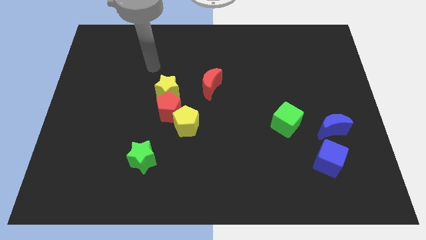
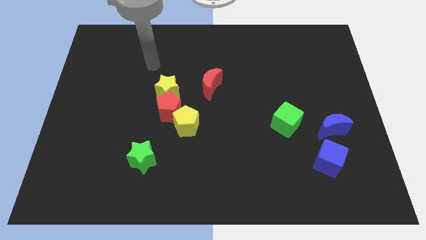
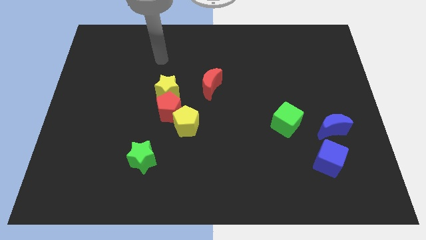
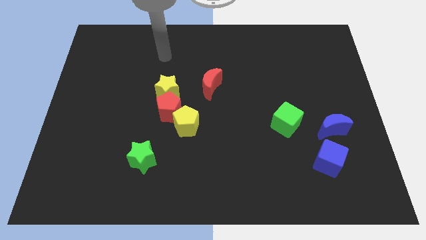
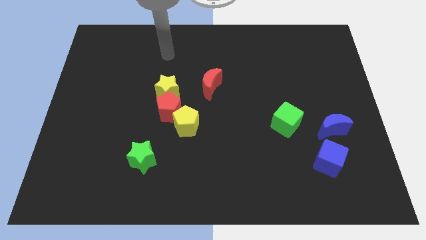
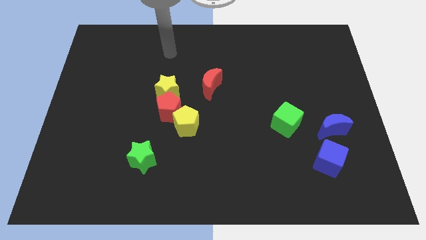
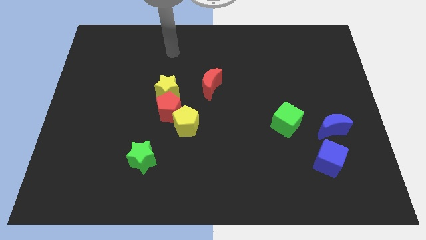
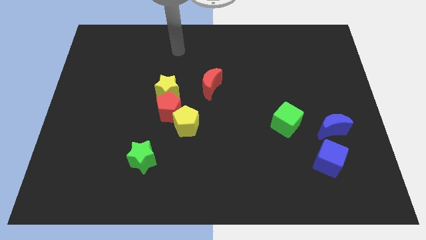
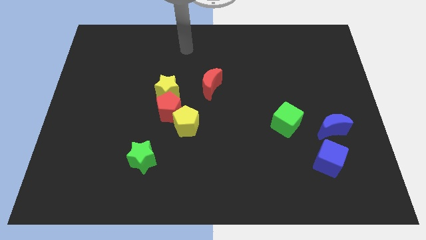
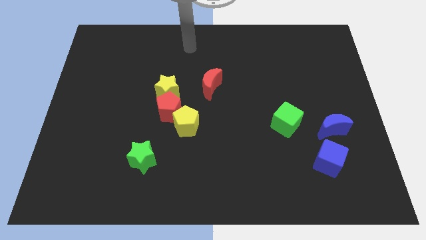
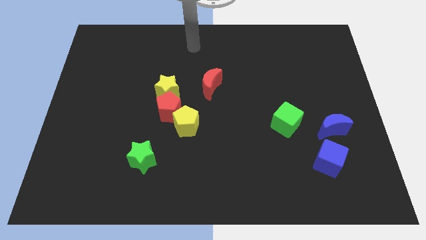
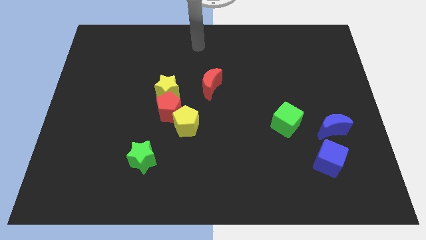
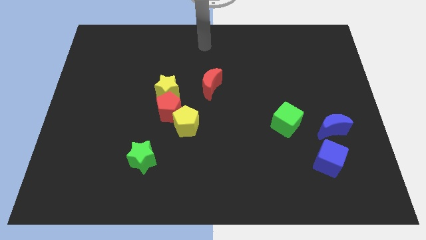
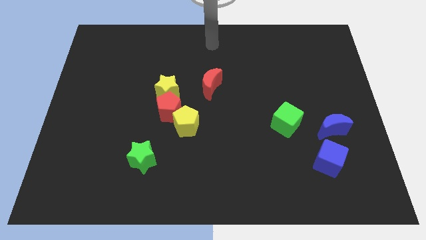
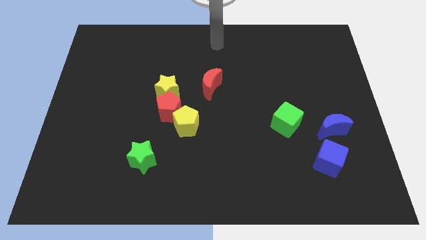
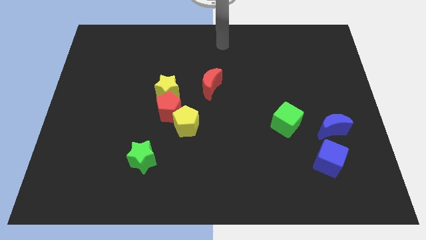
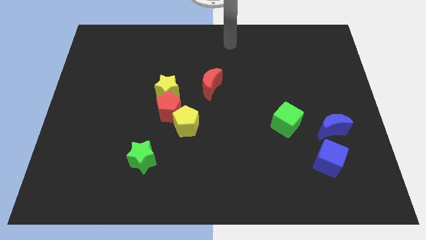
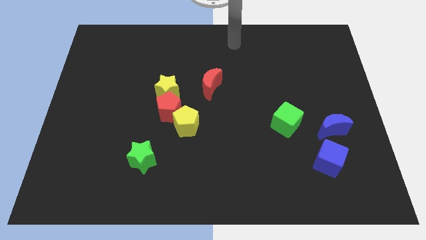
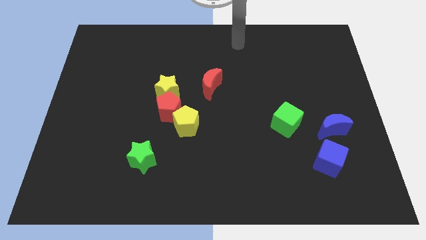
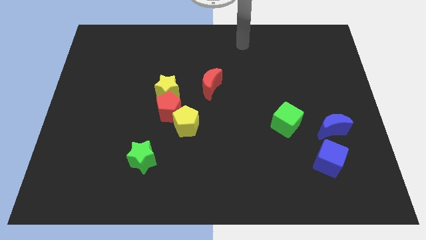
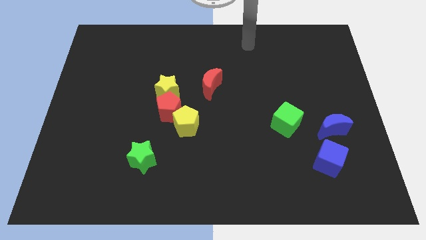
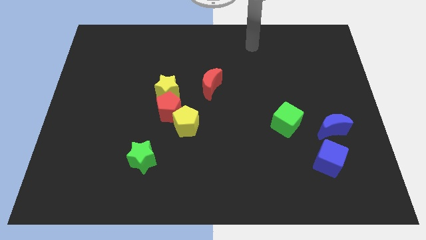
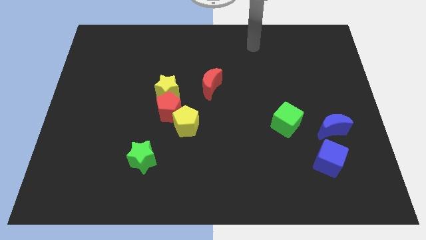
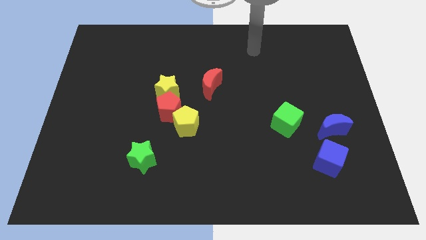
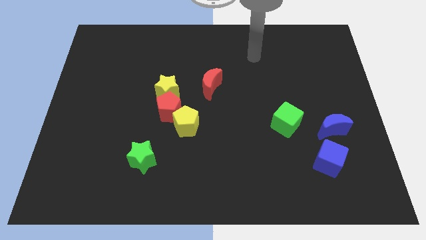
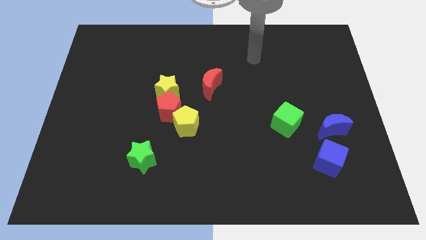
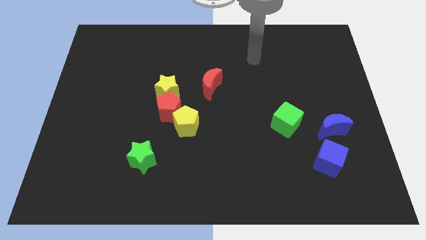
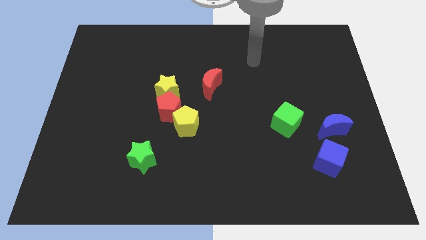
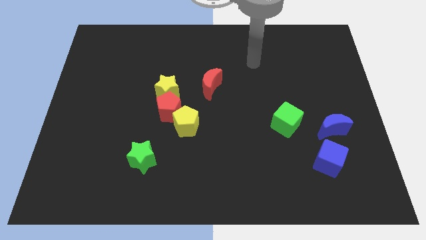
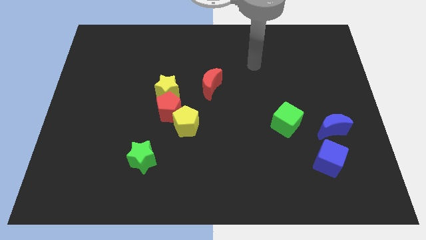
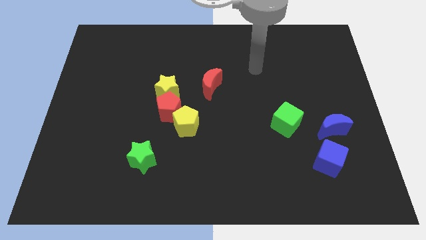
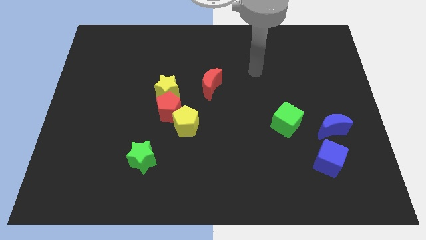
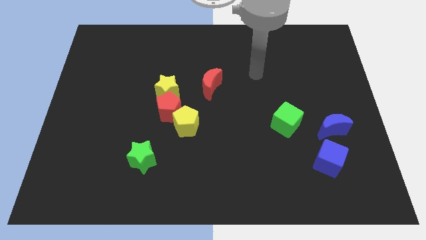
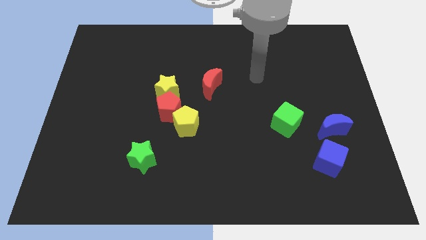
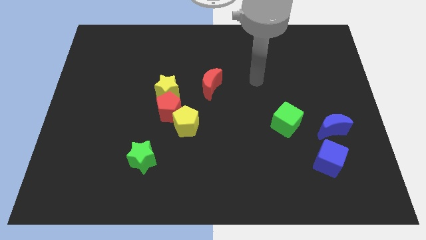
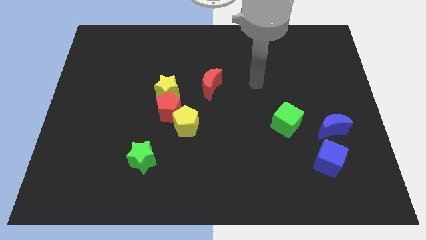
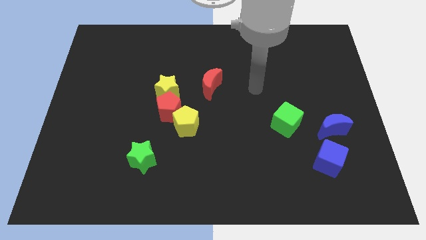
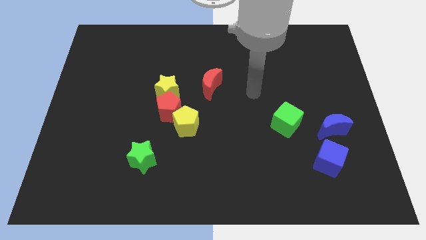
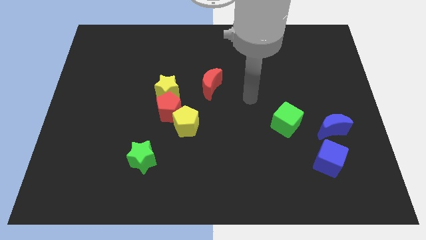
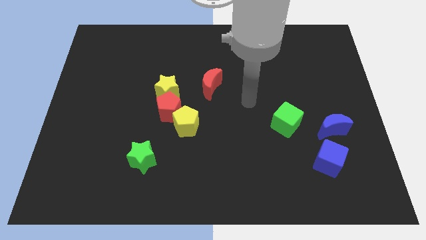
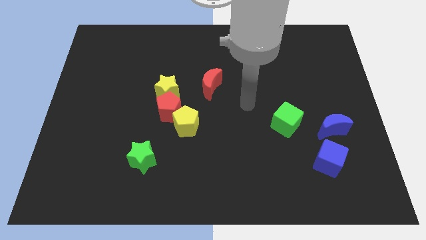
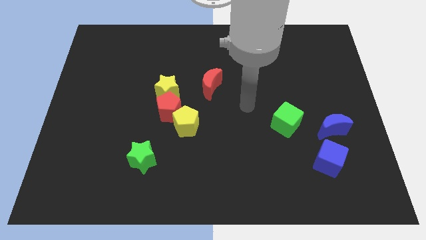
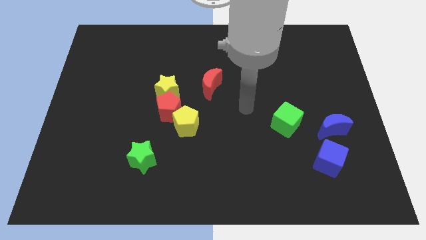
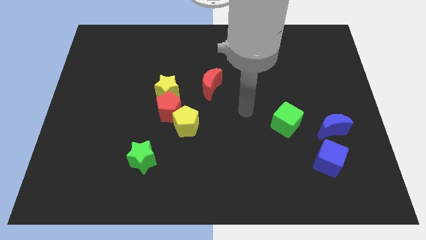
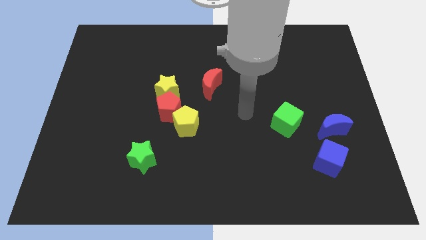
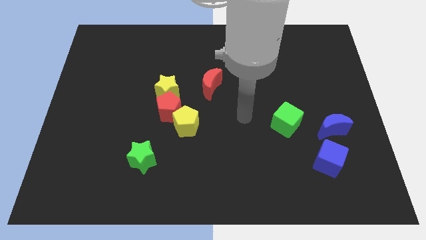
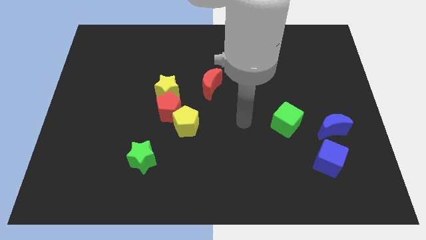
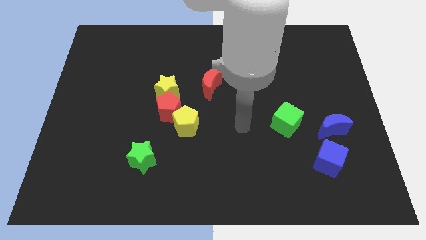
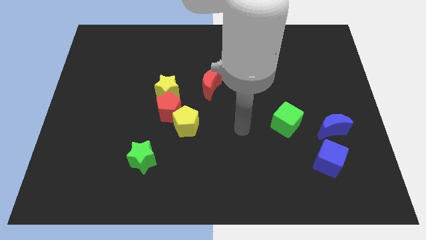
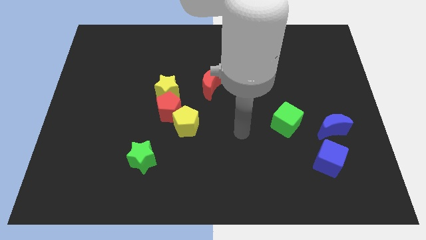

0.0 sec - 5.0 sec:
move your arm to the bottom of the board

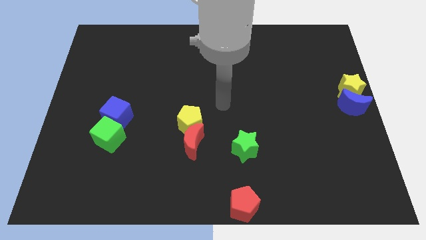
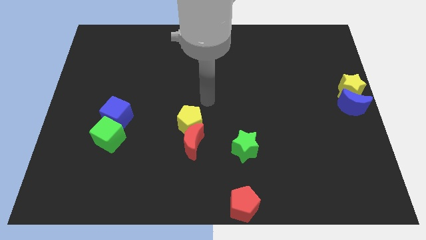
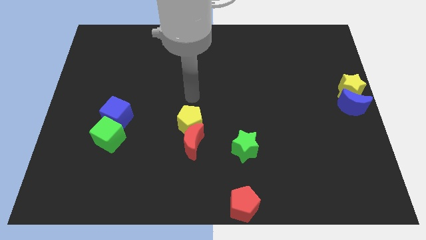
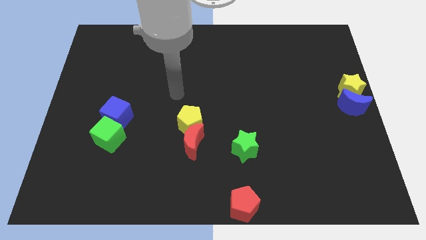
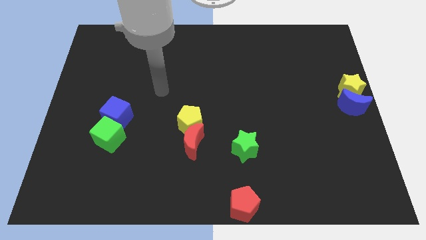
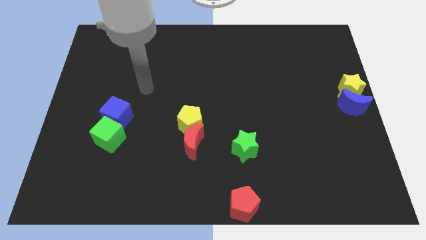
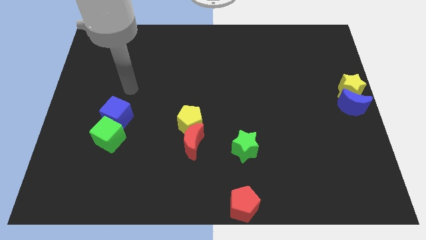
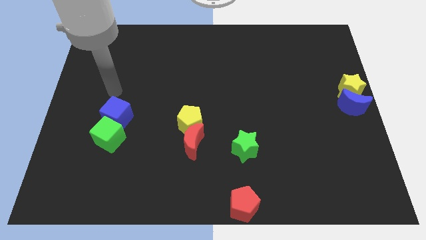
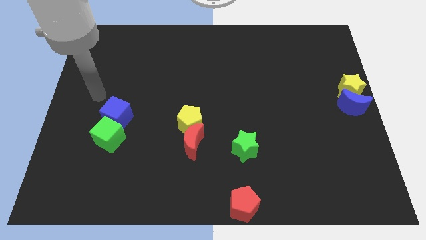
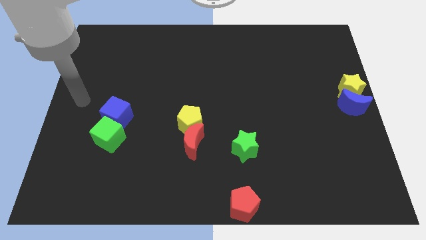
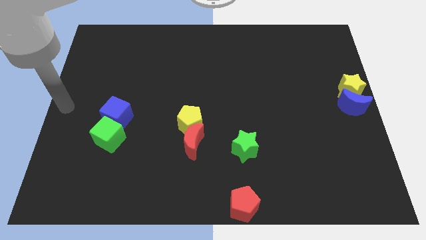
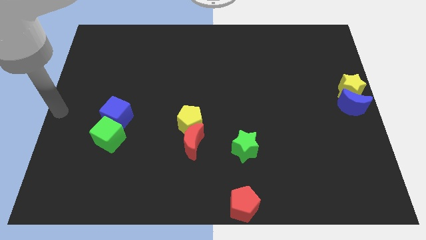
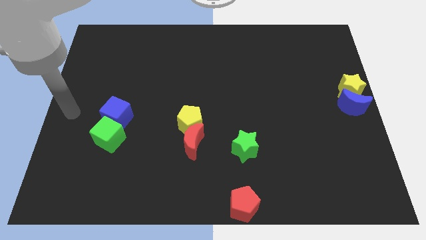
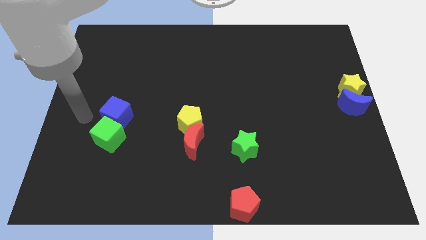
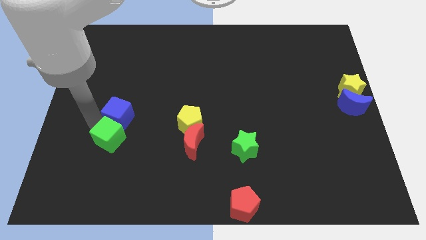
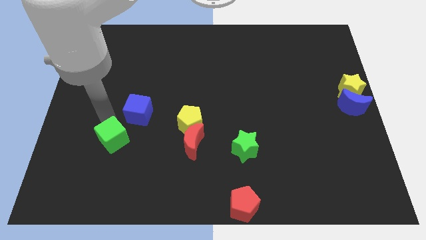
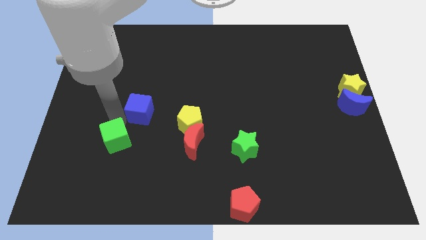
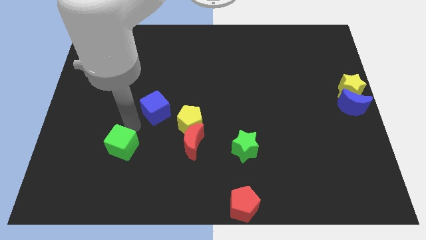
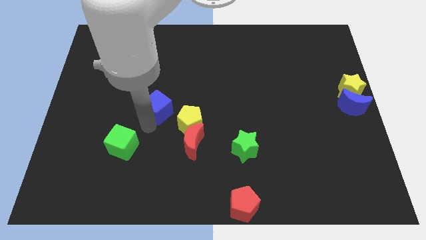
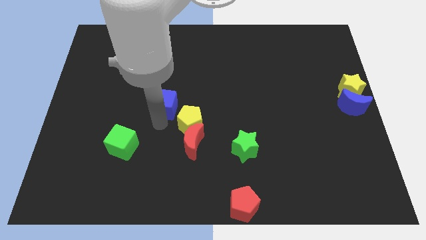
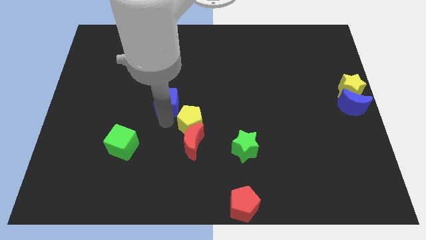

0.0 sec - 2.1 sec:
move the blue cube to the top left of the yellow pentagon

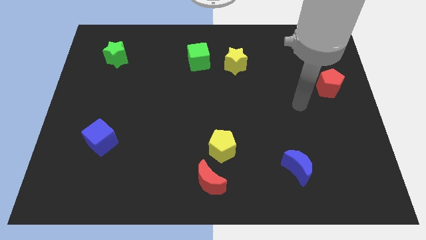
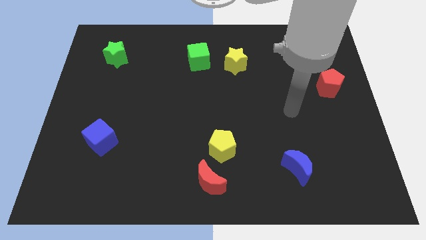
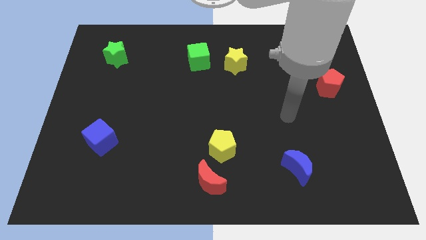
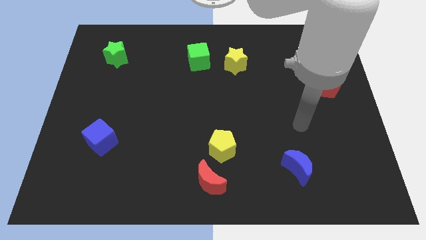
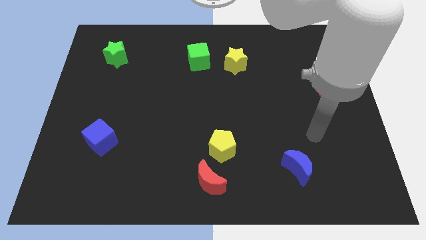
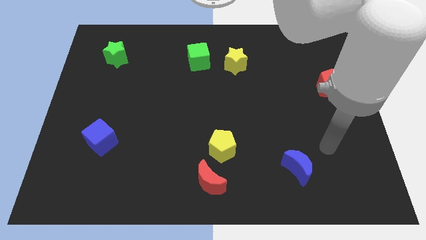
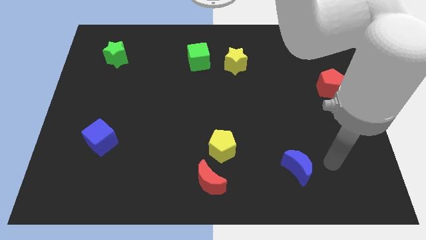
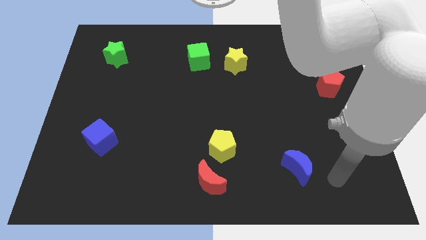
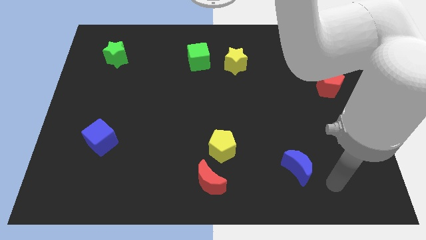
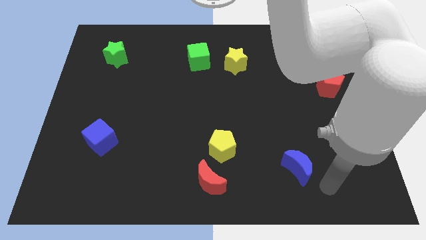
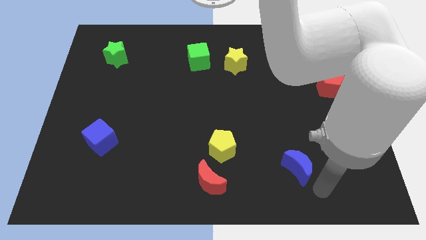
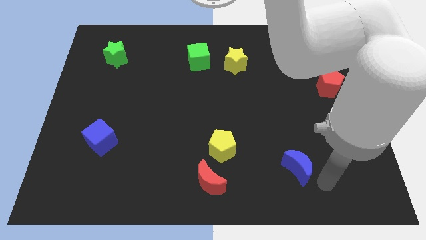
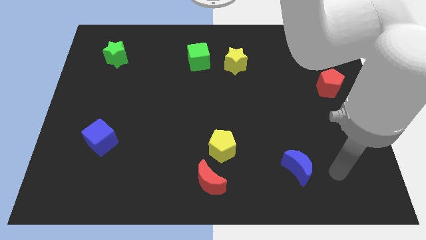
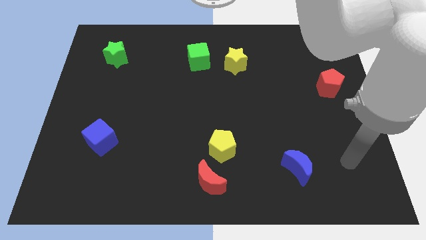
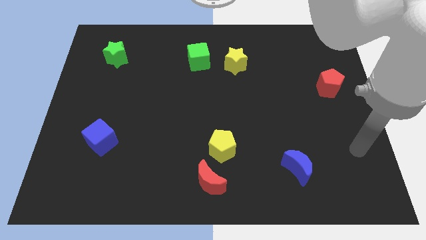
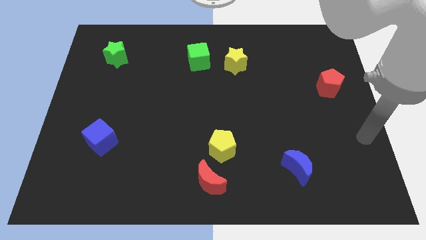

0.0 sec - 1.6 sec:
move your arm to the right side of the board

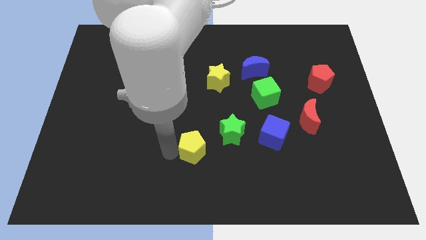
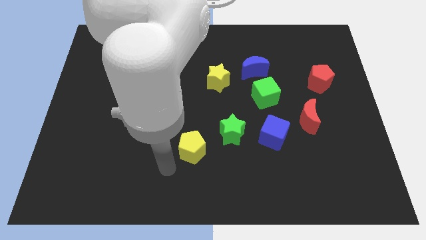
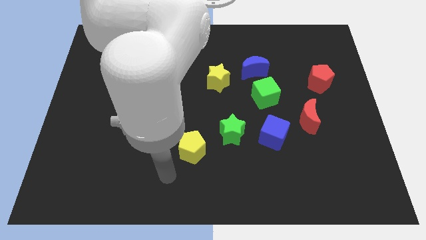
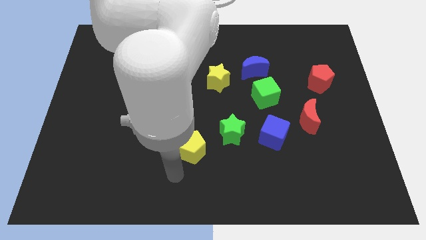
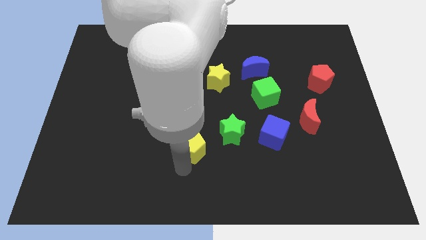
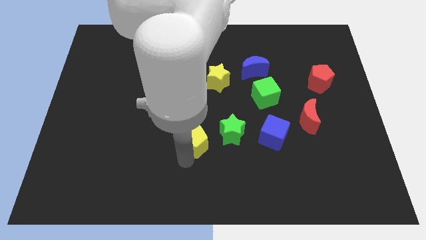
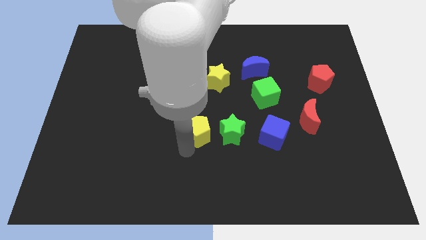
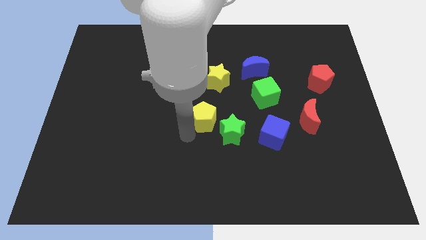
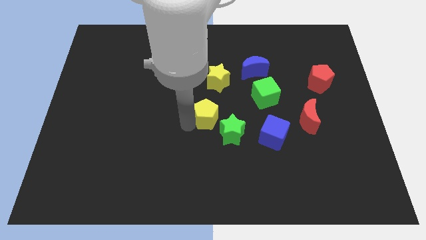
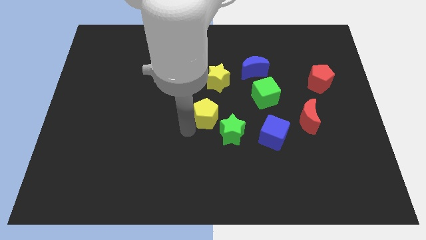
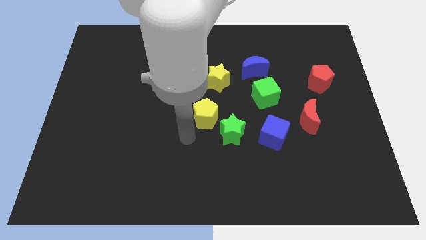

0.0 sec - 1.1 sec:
place the yellow pentagon vertically at the bottom of the yellow star
